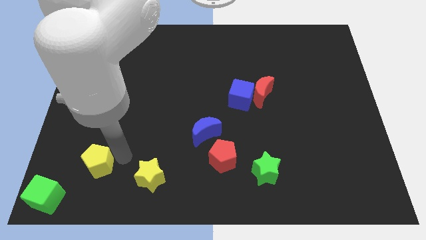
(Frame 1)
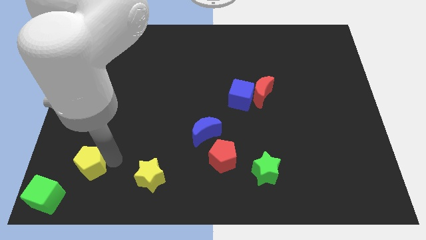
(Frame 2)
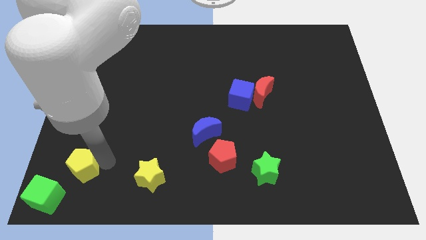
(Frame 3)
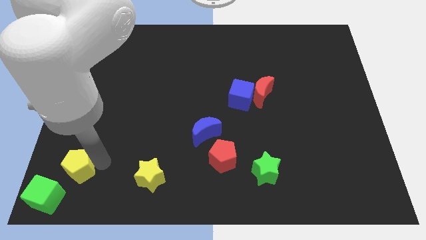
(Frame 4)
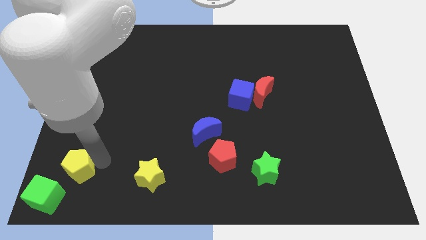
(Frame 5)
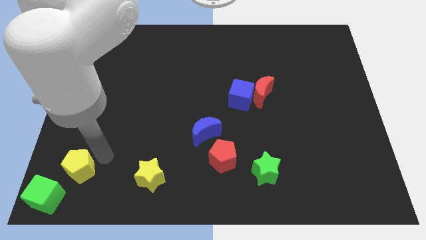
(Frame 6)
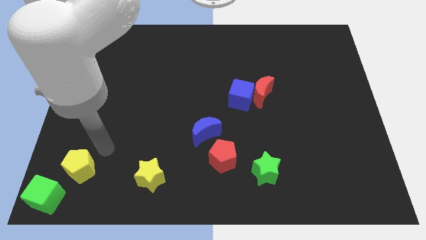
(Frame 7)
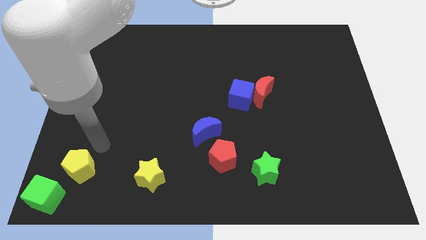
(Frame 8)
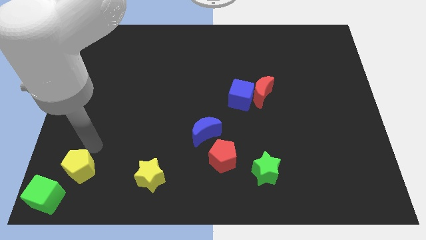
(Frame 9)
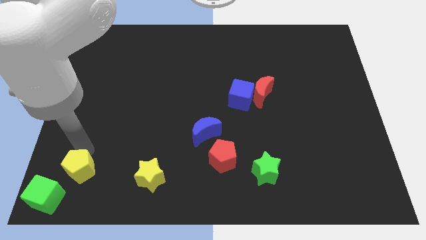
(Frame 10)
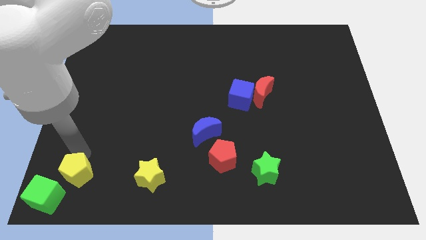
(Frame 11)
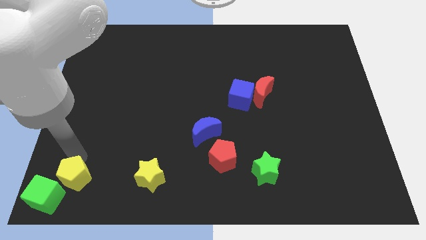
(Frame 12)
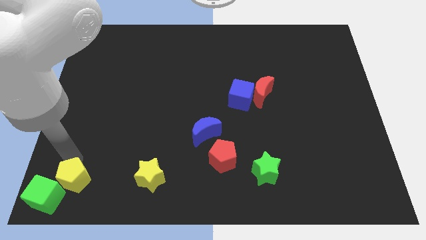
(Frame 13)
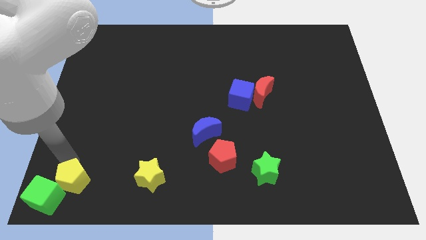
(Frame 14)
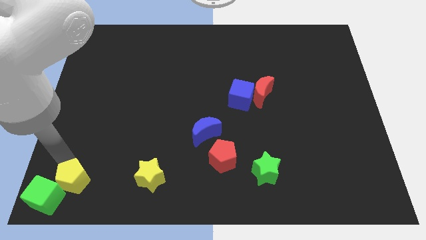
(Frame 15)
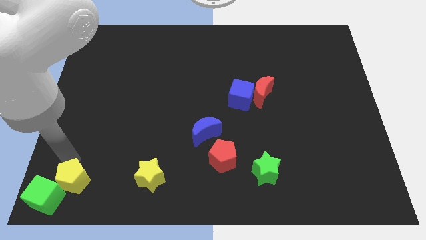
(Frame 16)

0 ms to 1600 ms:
push the yellow pentagon into the green cube

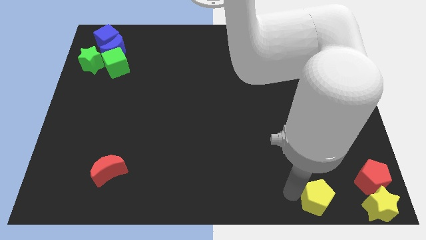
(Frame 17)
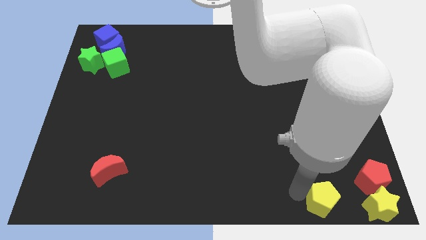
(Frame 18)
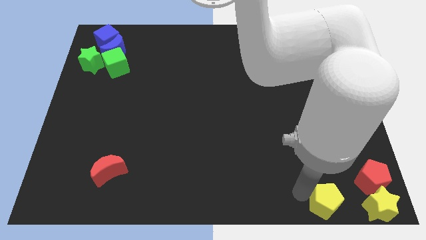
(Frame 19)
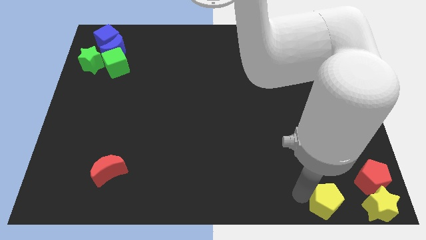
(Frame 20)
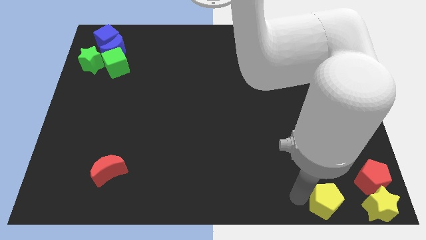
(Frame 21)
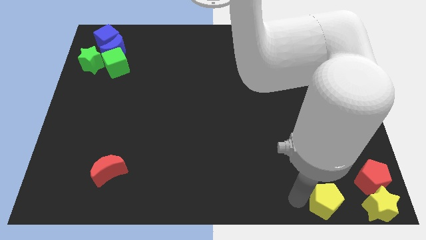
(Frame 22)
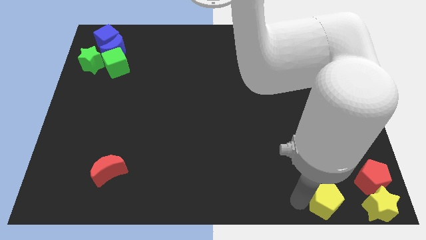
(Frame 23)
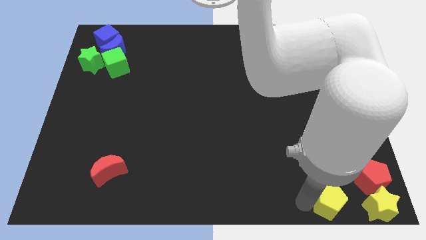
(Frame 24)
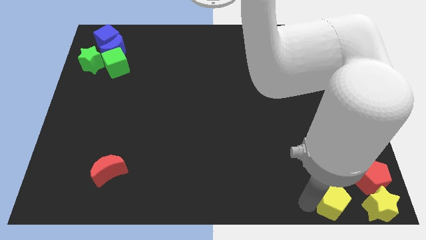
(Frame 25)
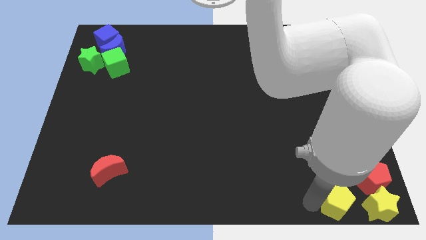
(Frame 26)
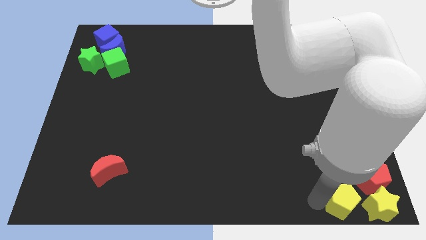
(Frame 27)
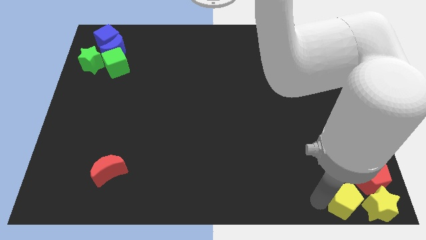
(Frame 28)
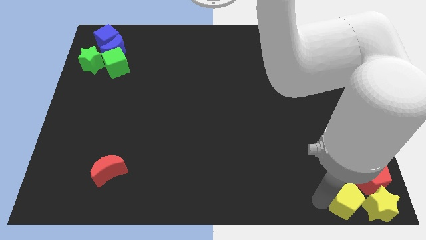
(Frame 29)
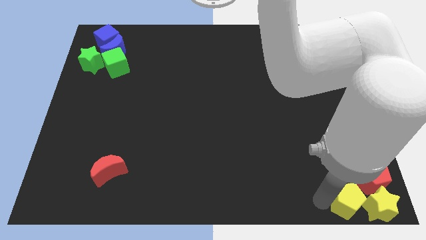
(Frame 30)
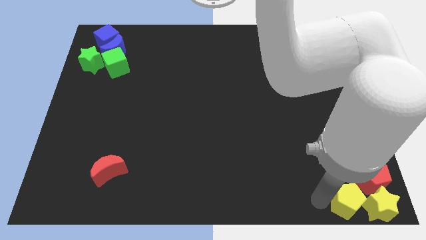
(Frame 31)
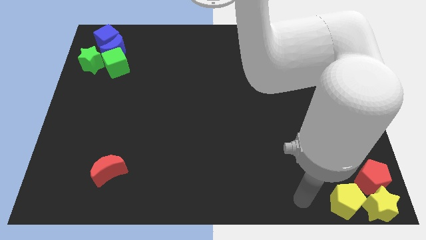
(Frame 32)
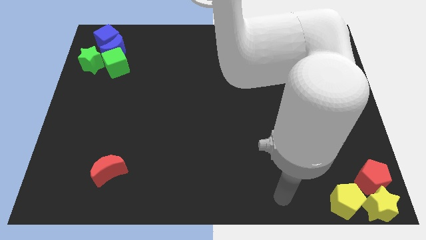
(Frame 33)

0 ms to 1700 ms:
place the yellow pentagon at the right side of the yellow star

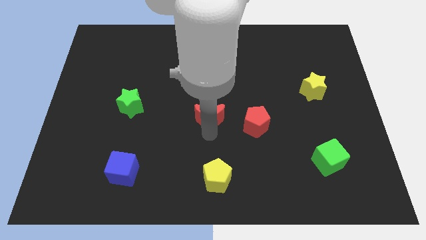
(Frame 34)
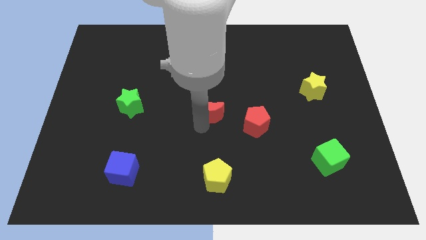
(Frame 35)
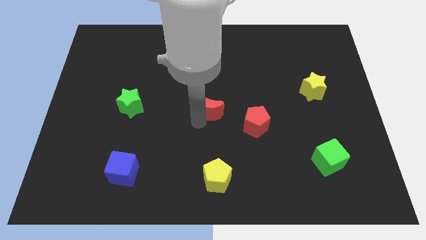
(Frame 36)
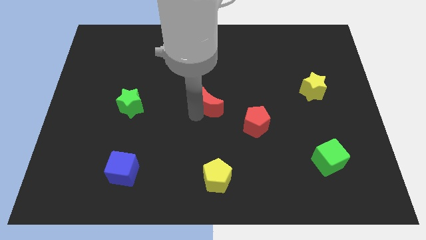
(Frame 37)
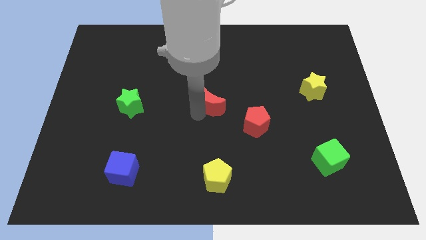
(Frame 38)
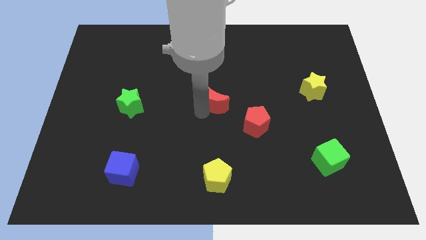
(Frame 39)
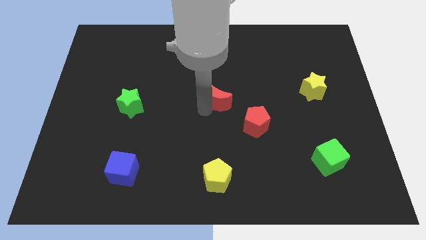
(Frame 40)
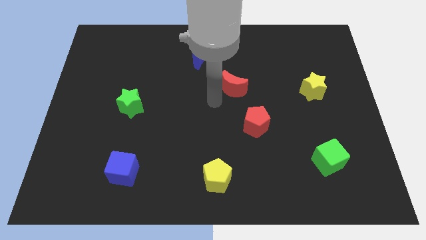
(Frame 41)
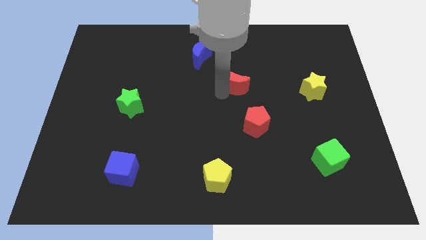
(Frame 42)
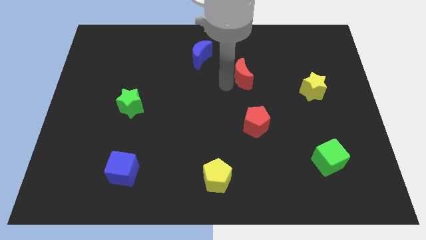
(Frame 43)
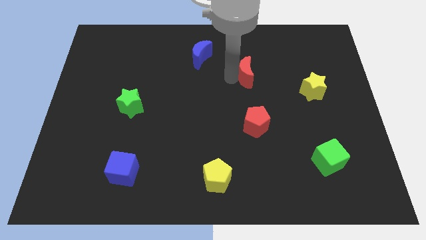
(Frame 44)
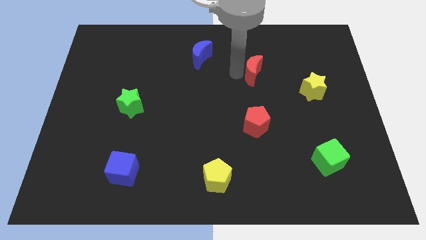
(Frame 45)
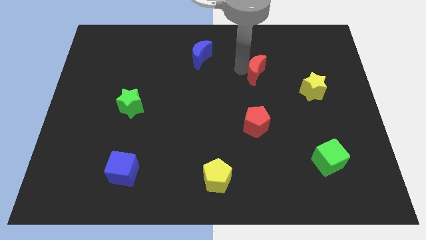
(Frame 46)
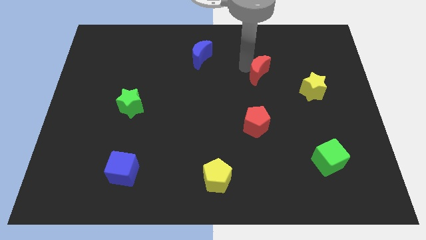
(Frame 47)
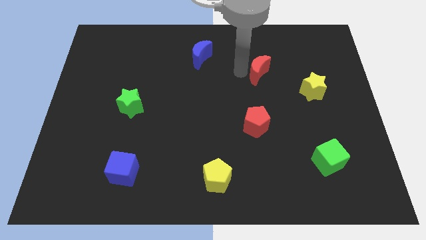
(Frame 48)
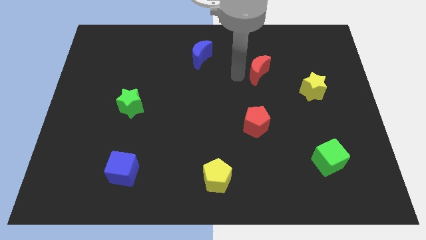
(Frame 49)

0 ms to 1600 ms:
push the red crescent above the red pentagon

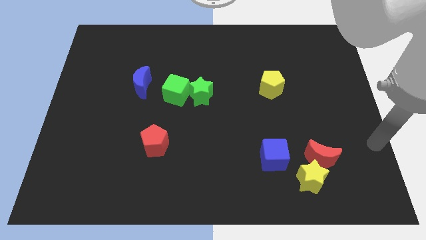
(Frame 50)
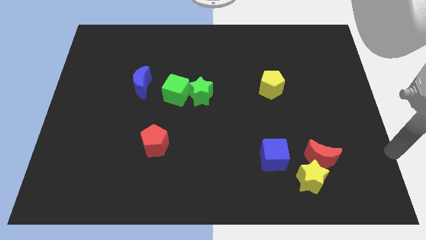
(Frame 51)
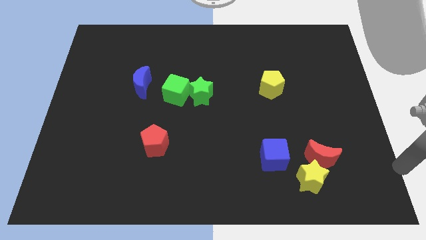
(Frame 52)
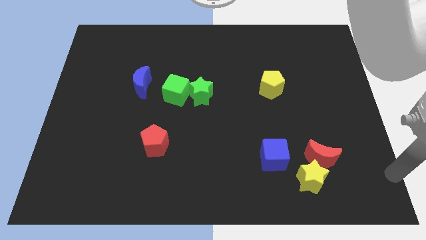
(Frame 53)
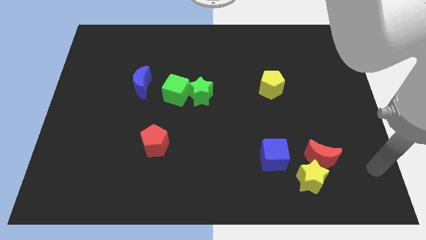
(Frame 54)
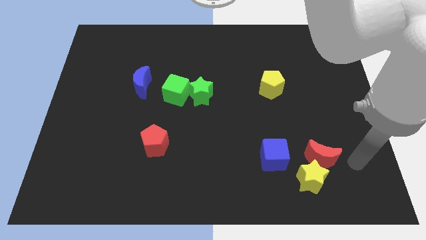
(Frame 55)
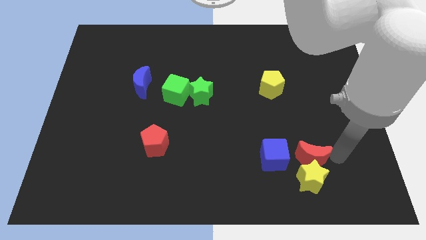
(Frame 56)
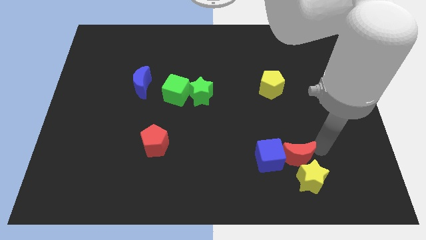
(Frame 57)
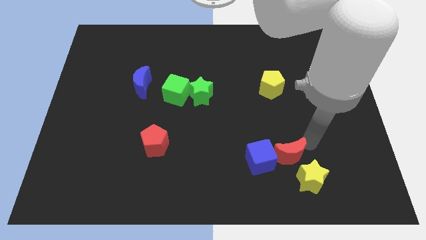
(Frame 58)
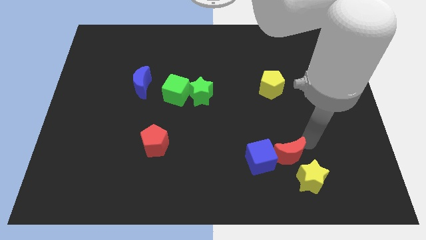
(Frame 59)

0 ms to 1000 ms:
move red moon into the blue cube

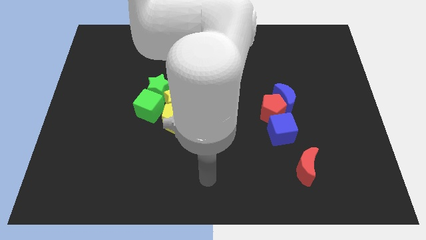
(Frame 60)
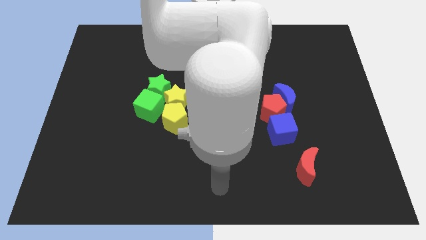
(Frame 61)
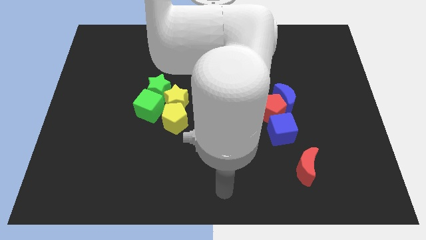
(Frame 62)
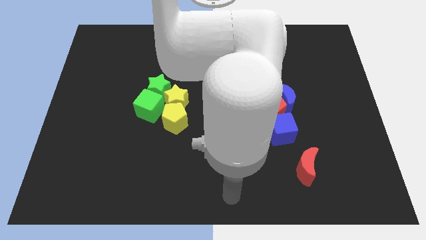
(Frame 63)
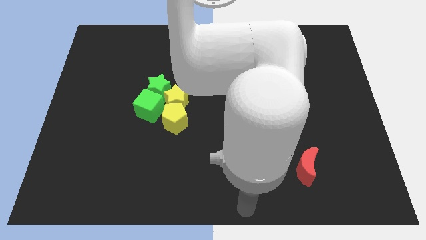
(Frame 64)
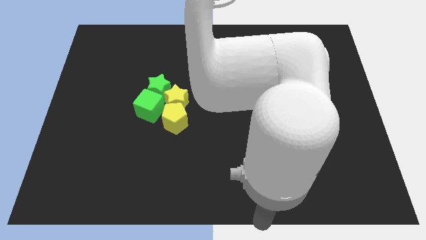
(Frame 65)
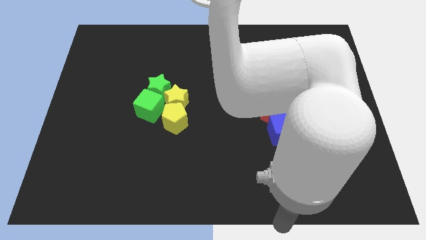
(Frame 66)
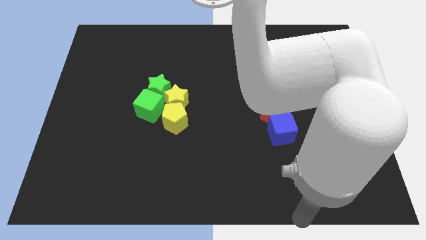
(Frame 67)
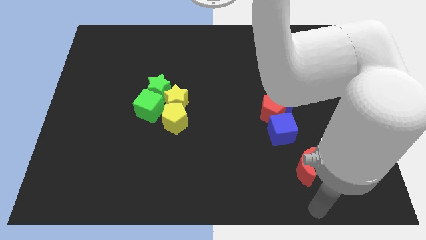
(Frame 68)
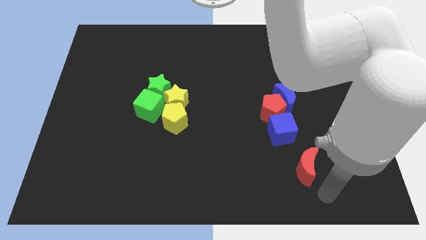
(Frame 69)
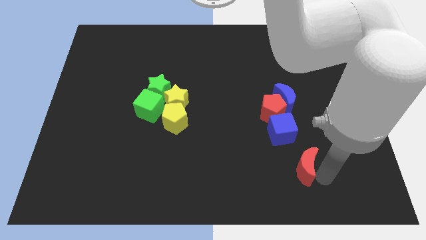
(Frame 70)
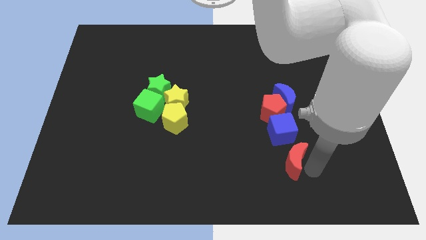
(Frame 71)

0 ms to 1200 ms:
move your arm towards the red pentagon

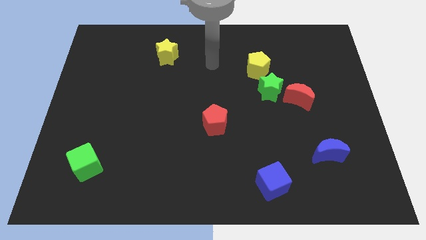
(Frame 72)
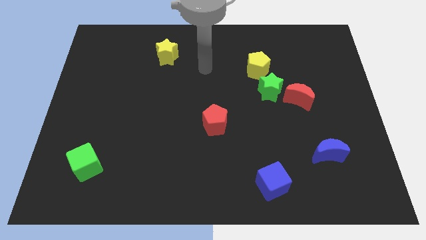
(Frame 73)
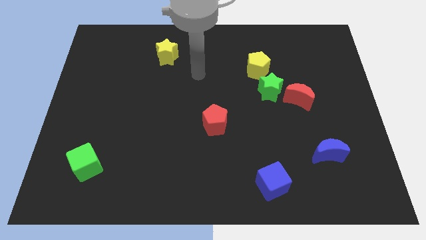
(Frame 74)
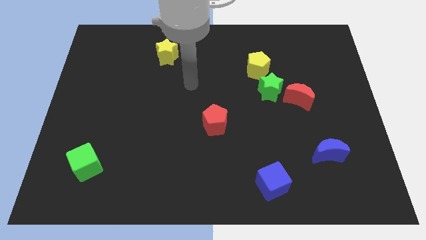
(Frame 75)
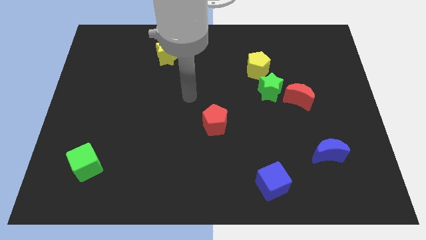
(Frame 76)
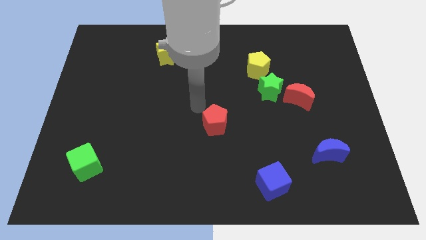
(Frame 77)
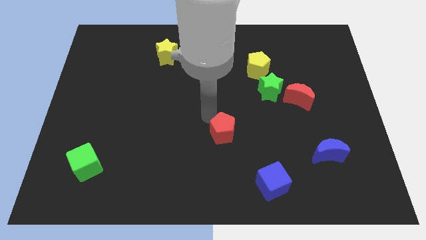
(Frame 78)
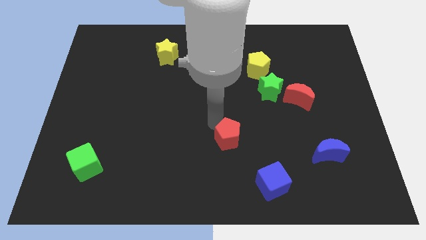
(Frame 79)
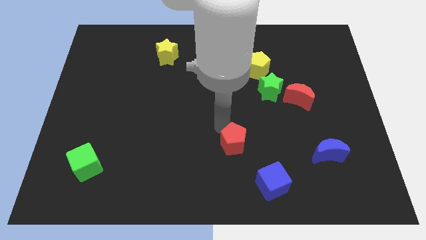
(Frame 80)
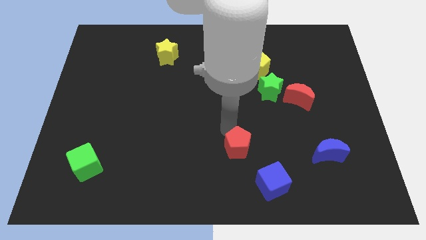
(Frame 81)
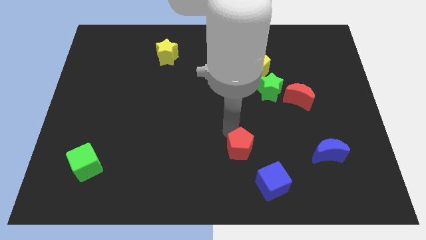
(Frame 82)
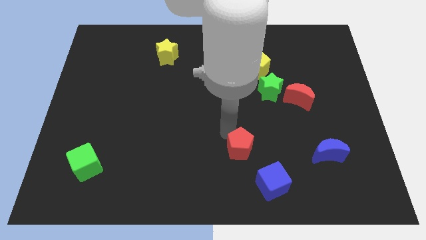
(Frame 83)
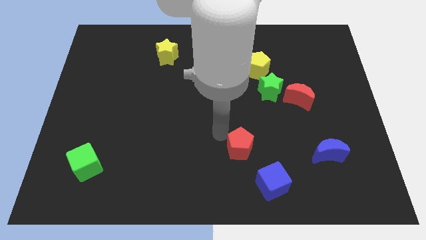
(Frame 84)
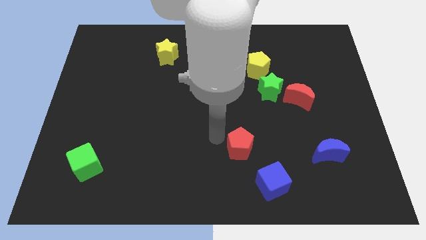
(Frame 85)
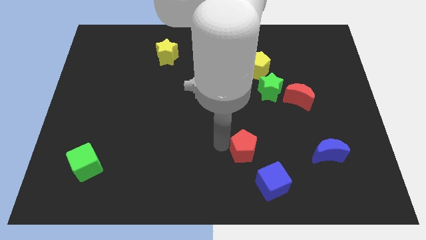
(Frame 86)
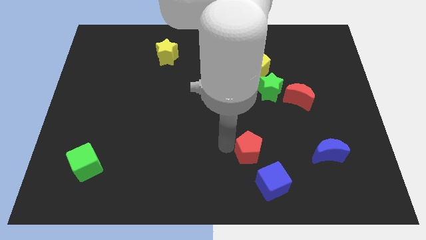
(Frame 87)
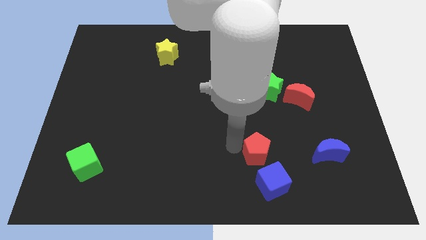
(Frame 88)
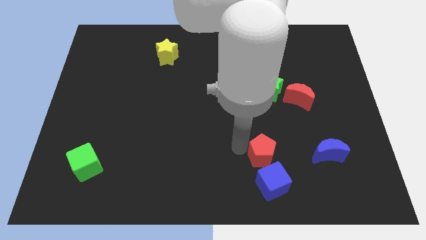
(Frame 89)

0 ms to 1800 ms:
move the red pentagon above the blue cube
